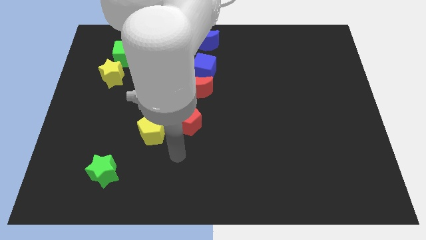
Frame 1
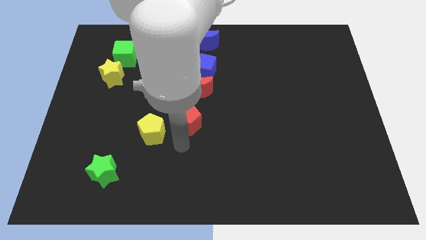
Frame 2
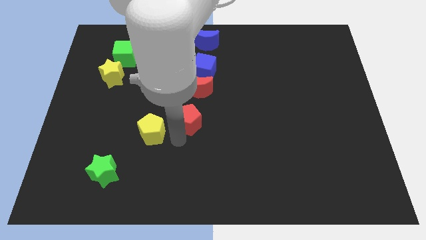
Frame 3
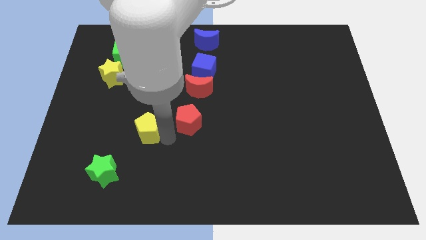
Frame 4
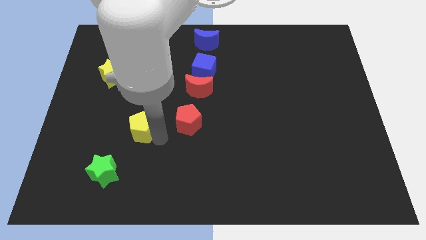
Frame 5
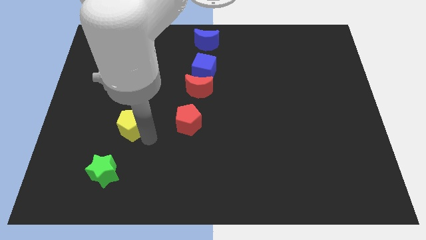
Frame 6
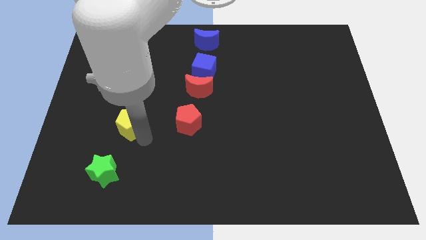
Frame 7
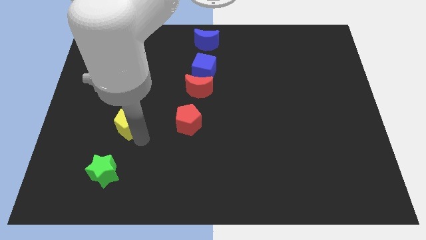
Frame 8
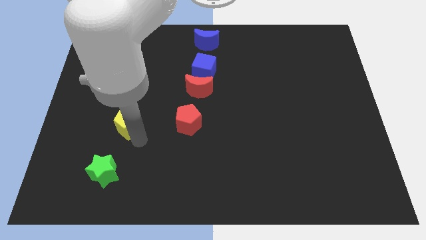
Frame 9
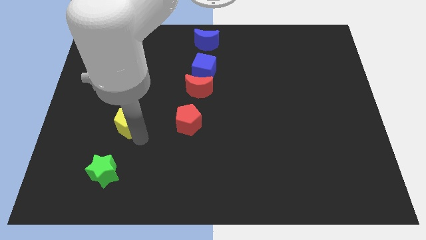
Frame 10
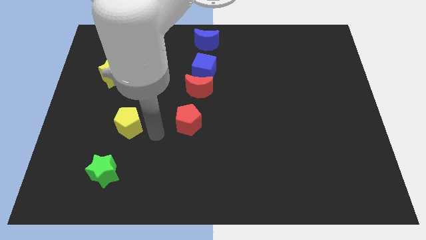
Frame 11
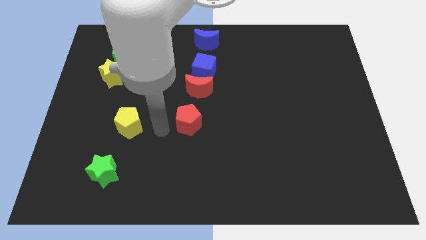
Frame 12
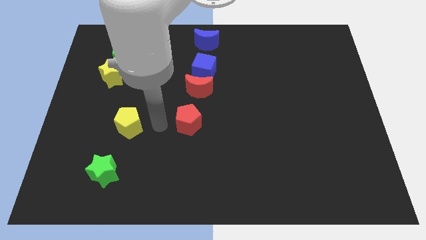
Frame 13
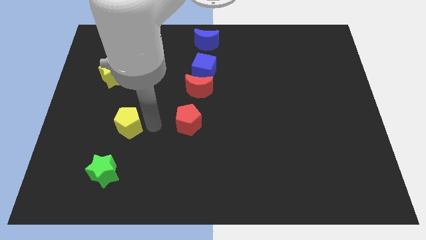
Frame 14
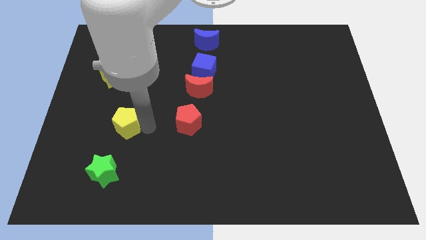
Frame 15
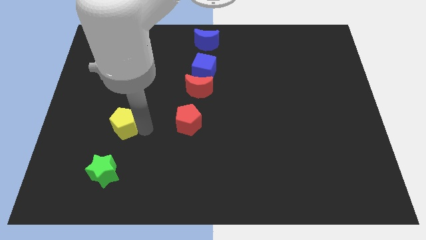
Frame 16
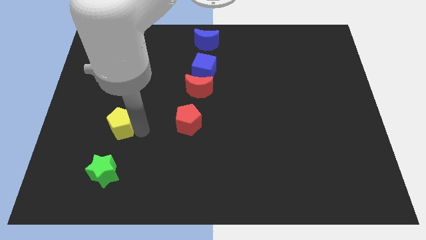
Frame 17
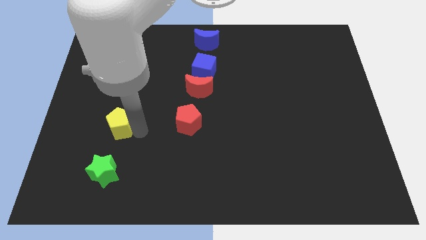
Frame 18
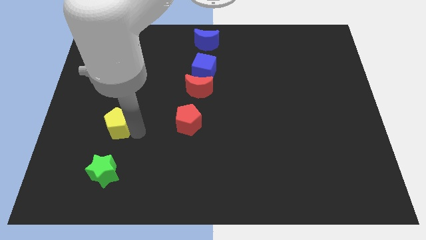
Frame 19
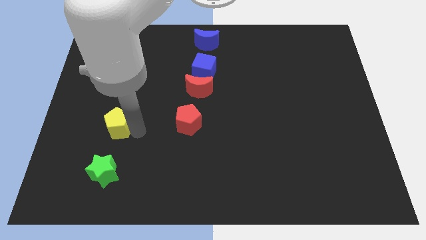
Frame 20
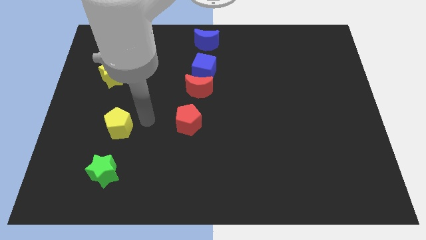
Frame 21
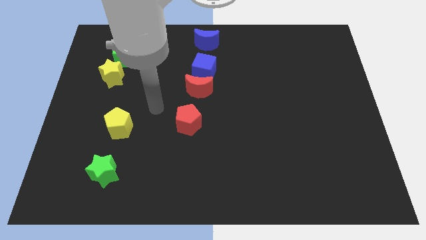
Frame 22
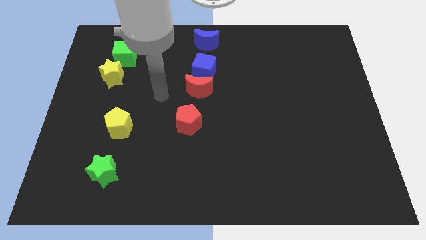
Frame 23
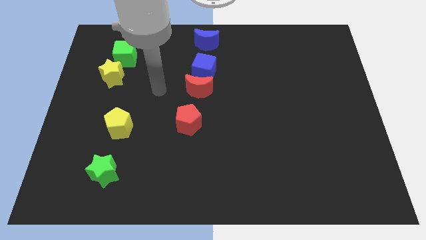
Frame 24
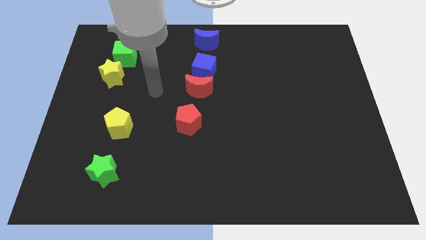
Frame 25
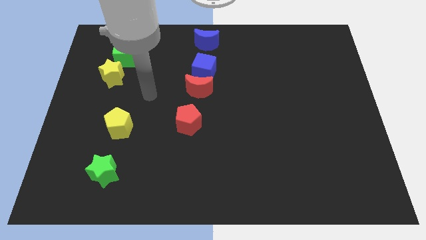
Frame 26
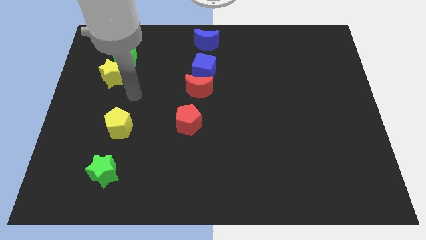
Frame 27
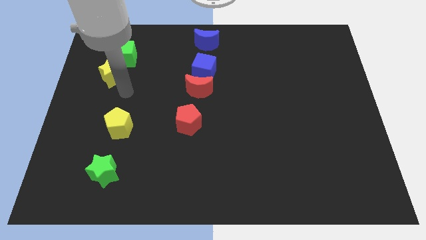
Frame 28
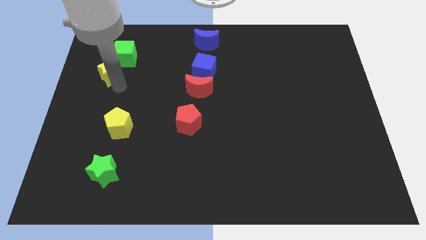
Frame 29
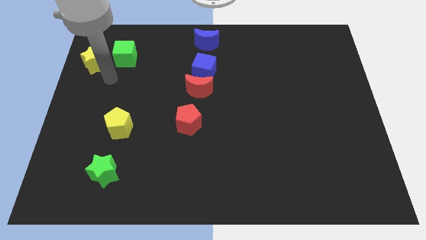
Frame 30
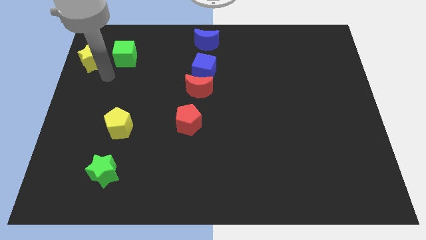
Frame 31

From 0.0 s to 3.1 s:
push the yellow pentagon towards the left side of the board

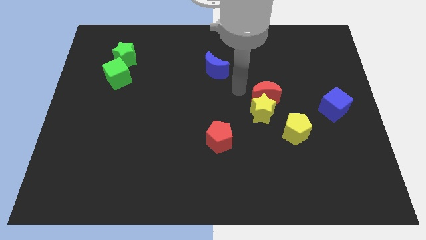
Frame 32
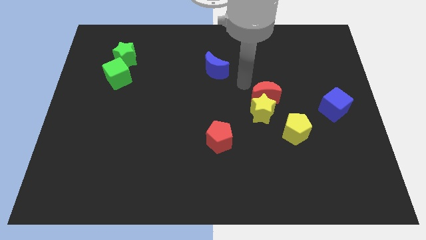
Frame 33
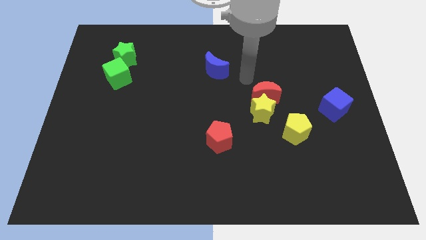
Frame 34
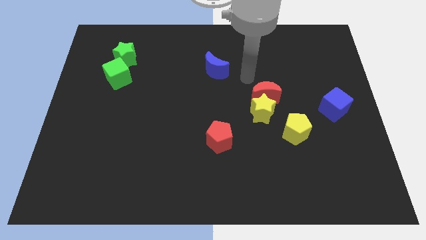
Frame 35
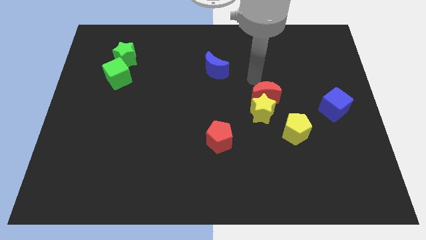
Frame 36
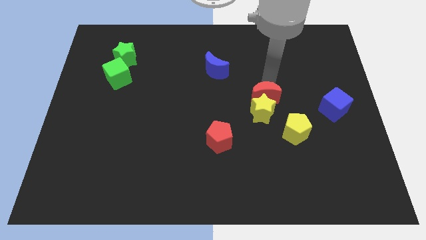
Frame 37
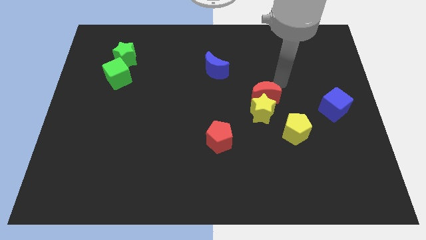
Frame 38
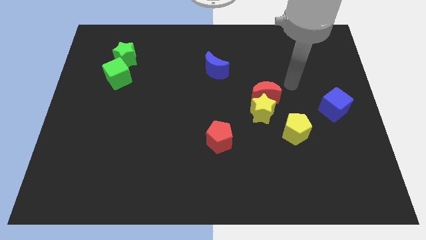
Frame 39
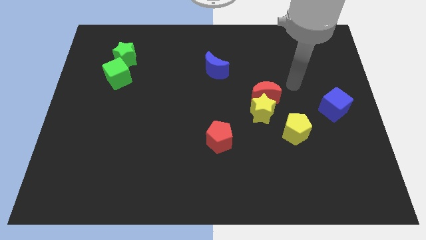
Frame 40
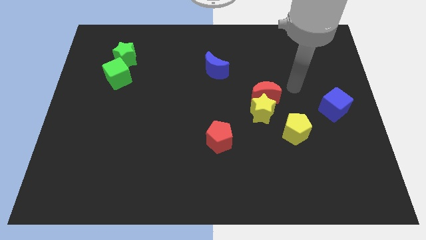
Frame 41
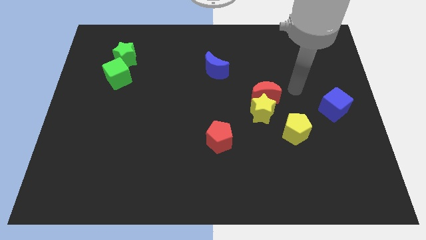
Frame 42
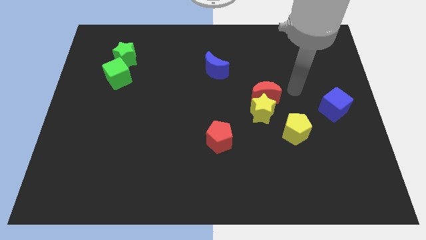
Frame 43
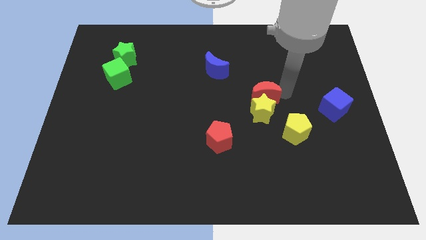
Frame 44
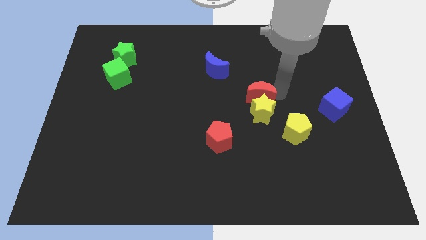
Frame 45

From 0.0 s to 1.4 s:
move your arm close to the red moon

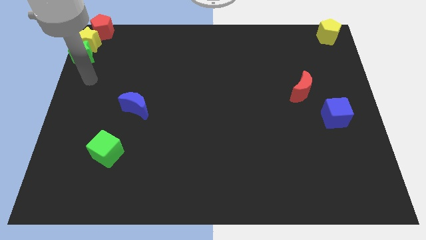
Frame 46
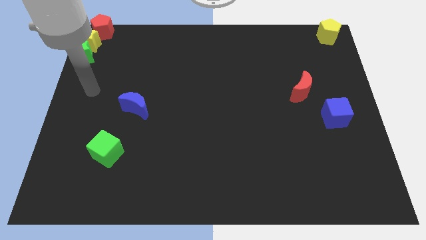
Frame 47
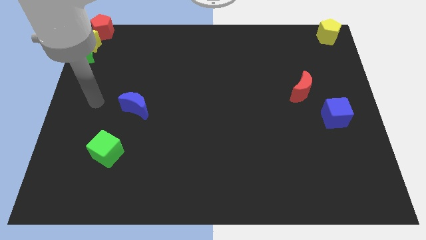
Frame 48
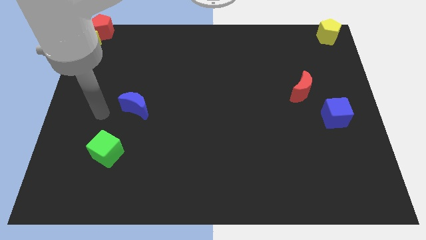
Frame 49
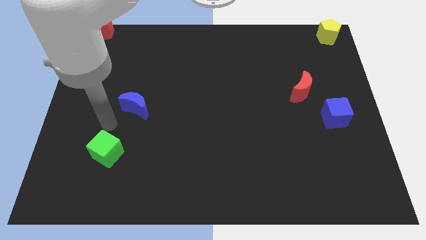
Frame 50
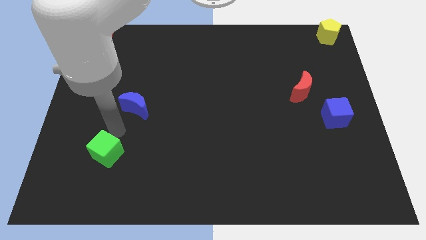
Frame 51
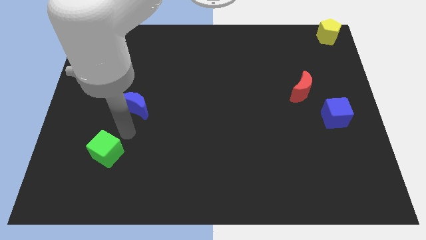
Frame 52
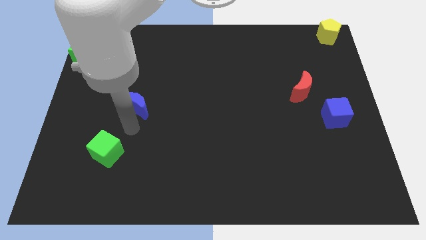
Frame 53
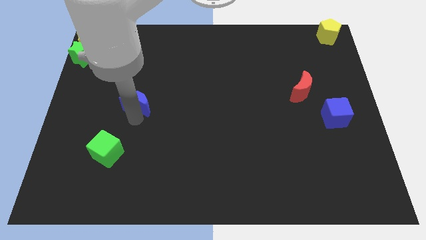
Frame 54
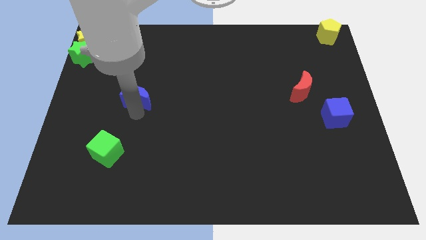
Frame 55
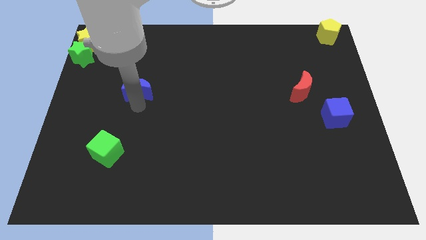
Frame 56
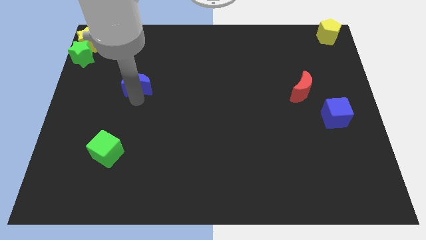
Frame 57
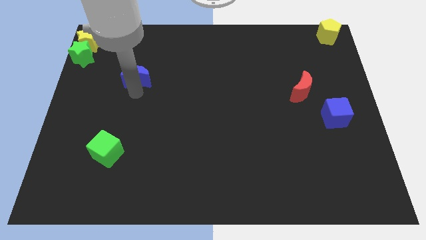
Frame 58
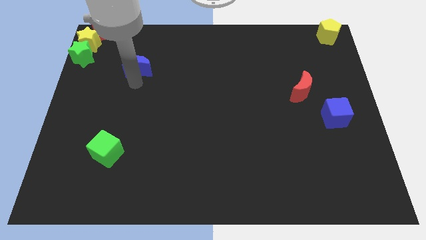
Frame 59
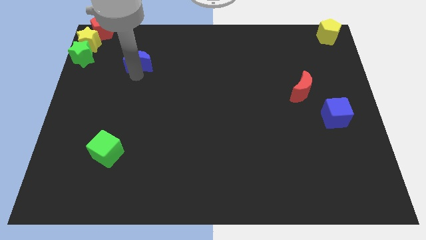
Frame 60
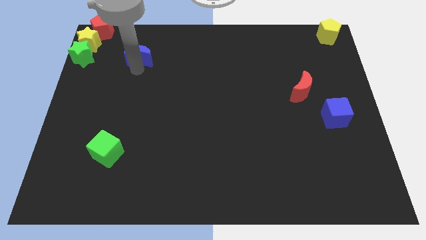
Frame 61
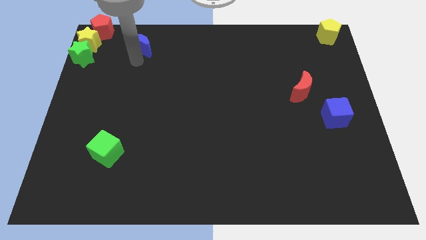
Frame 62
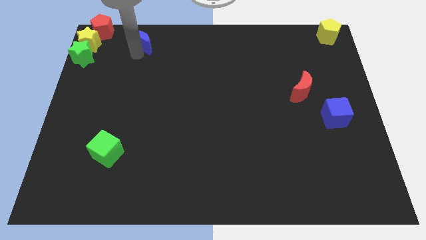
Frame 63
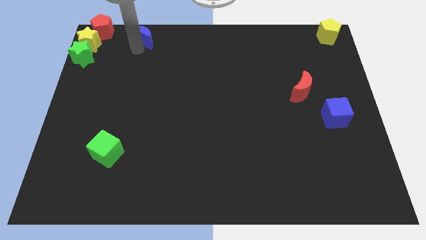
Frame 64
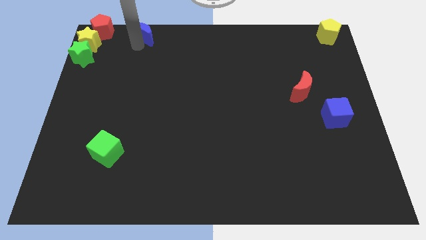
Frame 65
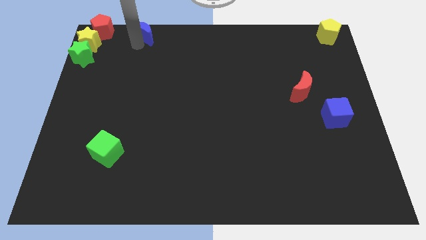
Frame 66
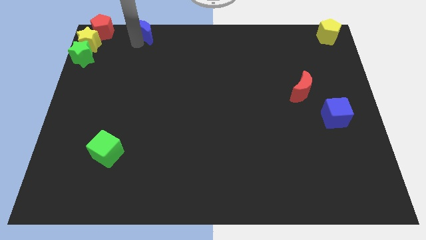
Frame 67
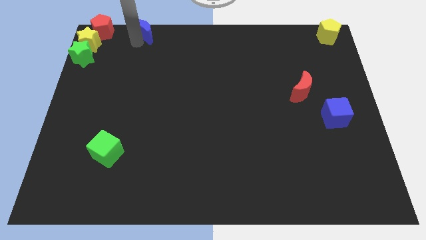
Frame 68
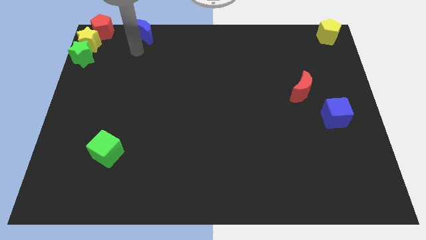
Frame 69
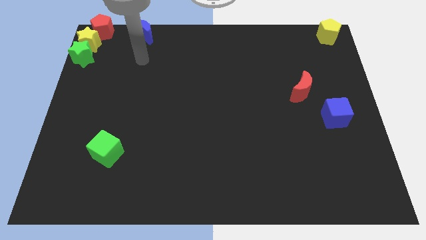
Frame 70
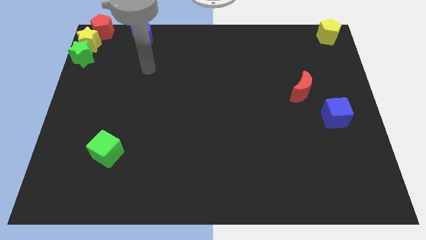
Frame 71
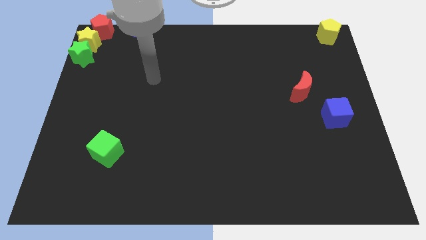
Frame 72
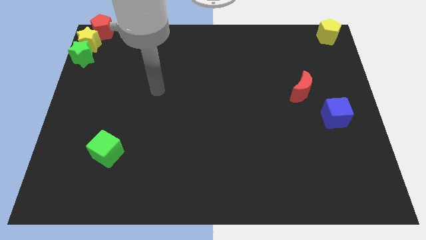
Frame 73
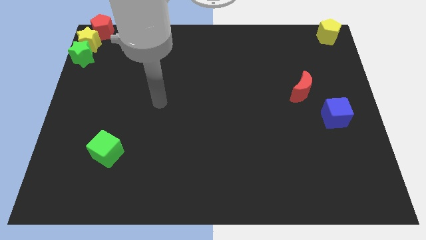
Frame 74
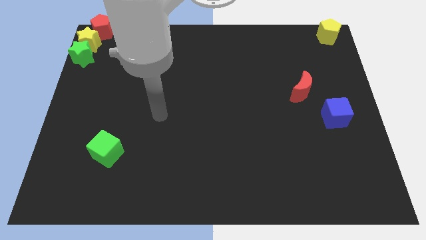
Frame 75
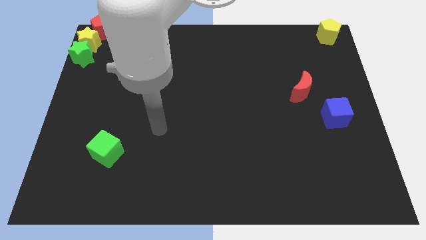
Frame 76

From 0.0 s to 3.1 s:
place the blue moon to the right of the red pentagon

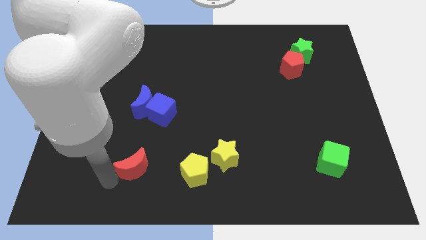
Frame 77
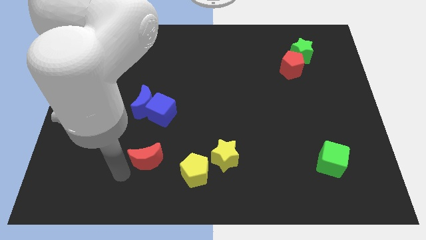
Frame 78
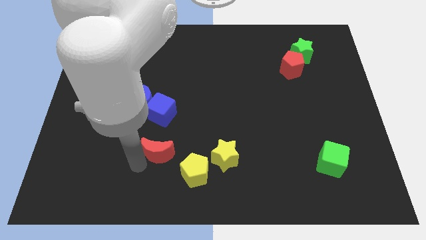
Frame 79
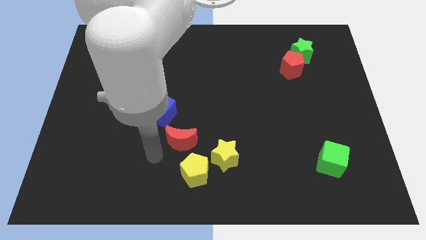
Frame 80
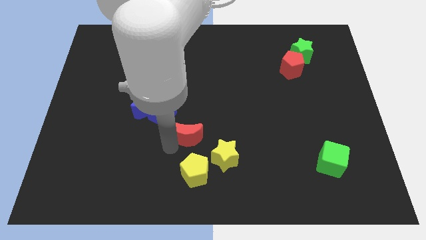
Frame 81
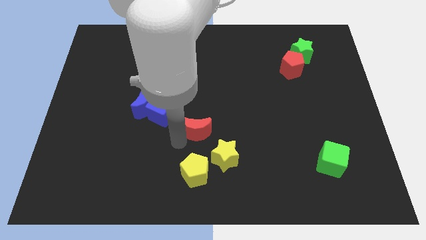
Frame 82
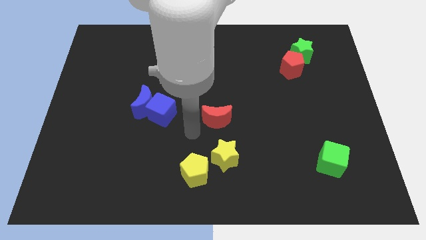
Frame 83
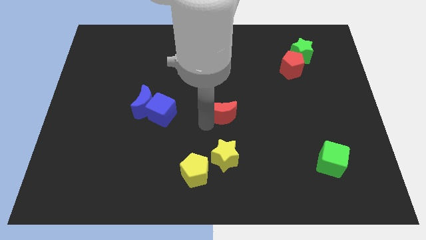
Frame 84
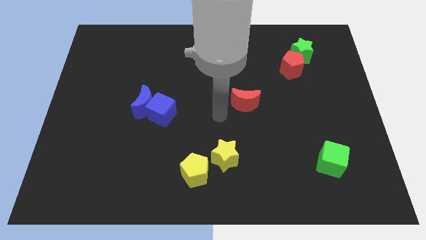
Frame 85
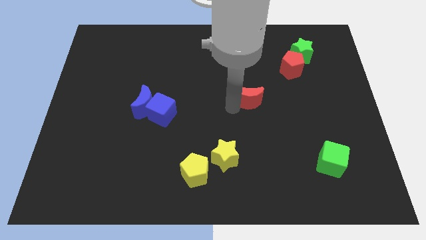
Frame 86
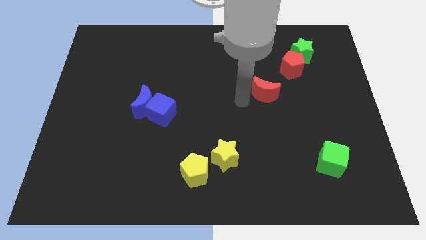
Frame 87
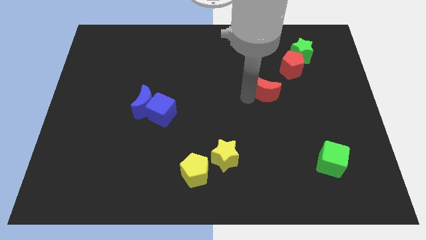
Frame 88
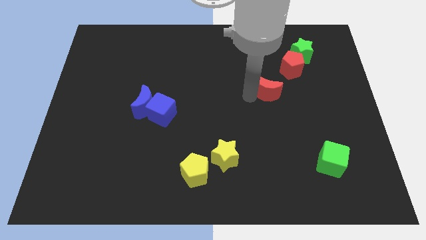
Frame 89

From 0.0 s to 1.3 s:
drag the red moon towards the red pentagon

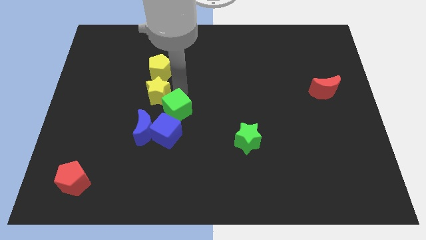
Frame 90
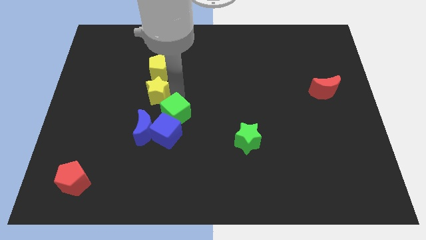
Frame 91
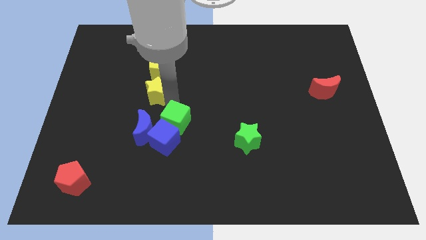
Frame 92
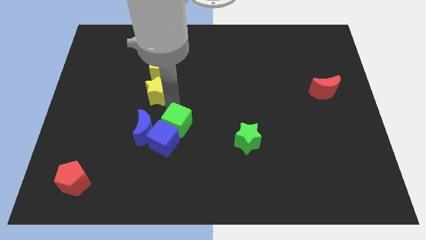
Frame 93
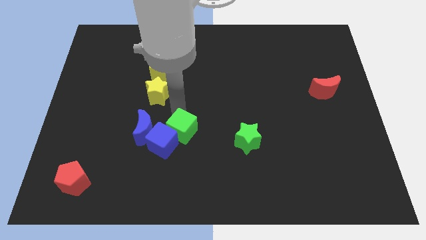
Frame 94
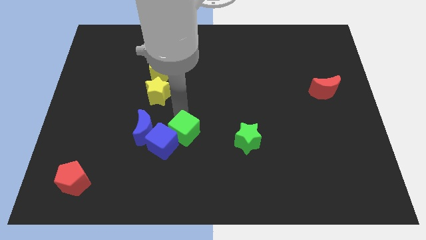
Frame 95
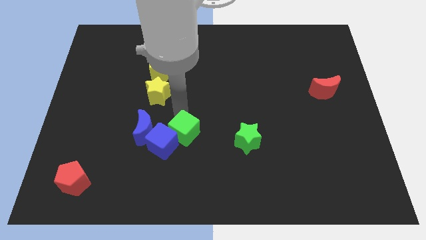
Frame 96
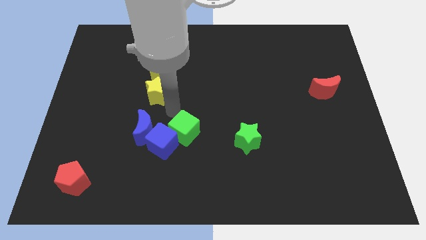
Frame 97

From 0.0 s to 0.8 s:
move the green cube into the blue cube
